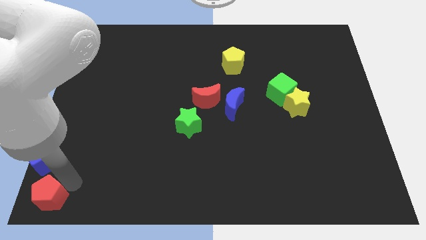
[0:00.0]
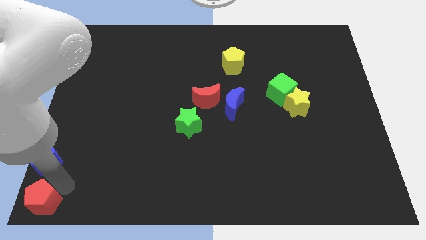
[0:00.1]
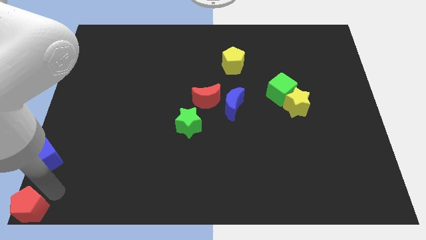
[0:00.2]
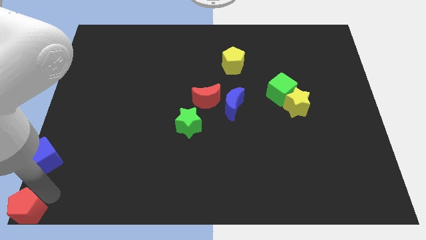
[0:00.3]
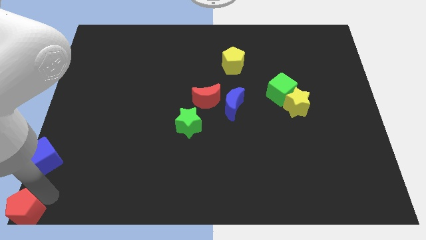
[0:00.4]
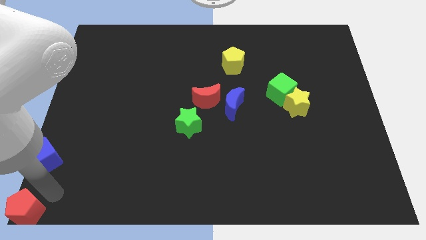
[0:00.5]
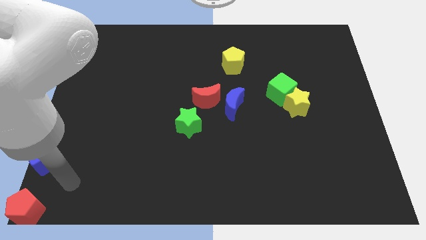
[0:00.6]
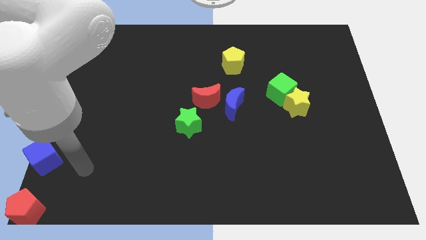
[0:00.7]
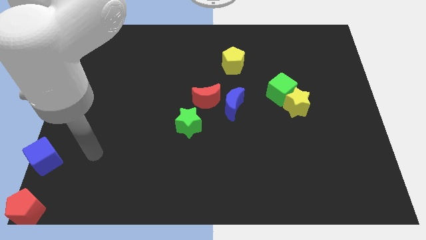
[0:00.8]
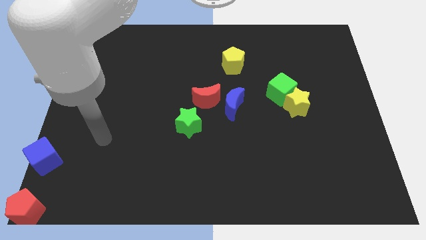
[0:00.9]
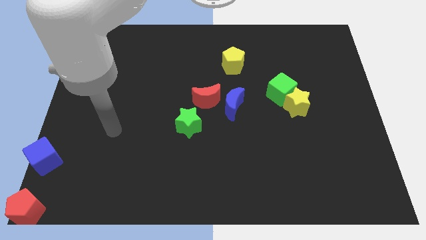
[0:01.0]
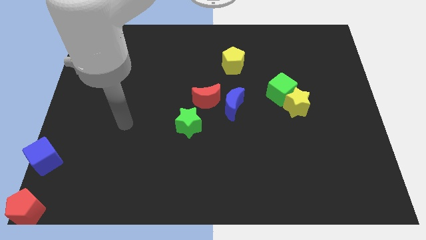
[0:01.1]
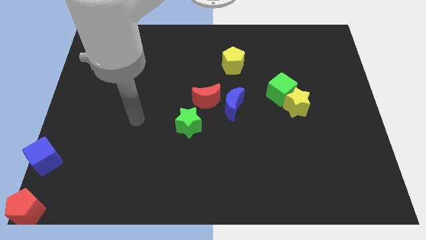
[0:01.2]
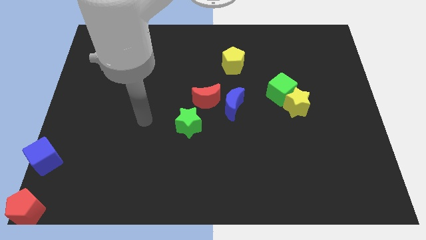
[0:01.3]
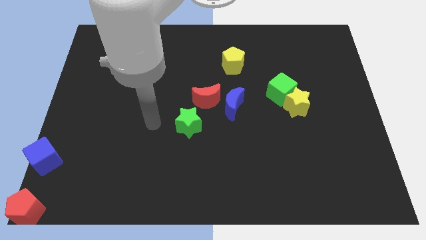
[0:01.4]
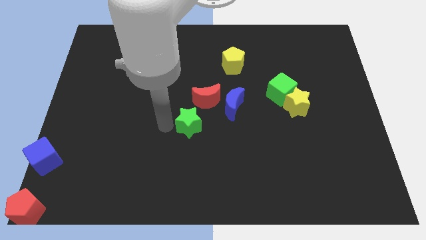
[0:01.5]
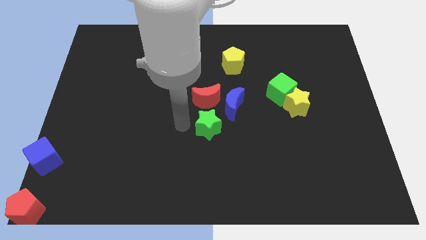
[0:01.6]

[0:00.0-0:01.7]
move the arm away from the red pentagon

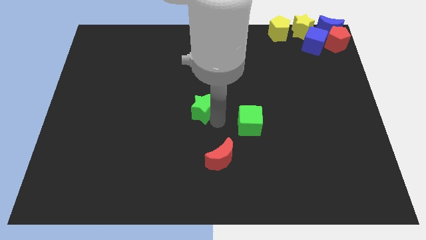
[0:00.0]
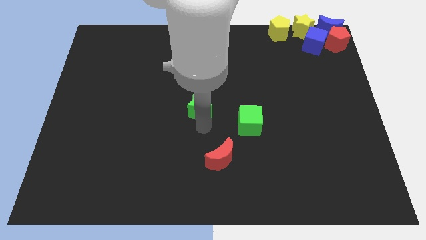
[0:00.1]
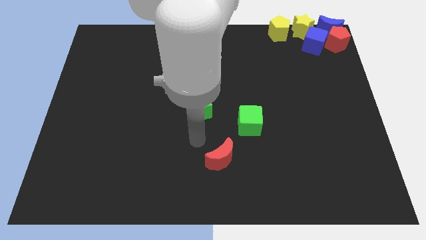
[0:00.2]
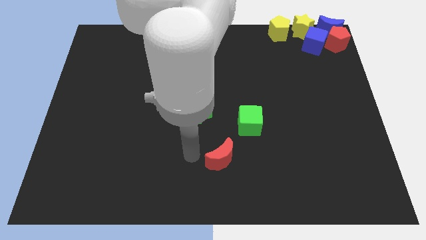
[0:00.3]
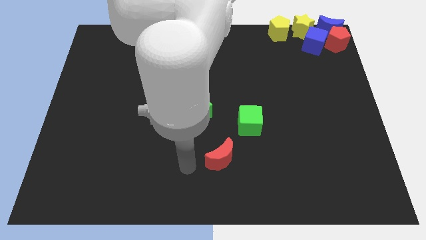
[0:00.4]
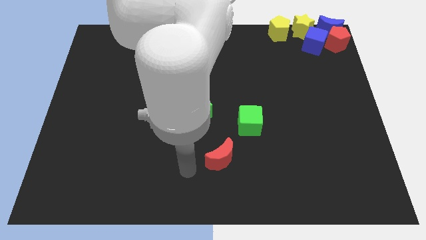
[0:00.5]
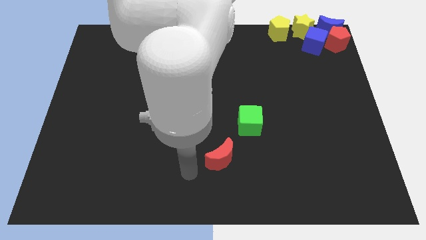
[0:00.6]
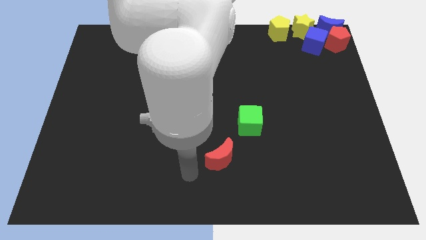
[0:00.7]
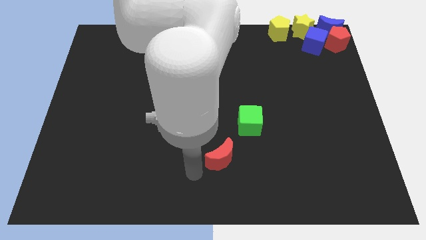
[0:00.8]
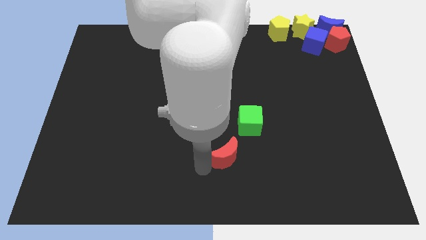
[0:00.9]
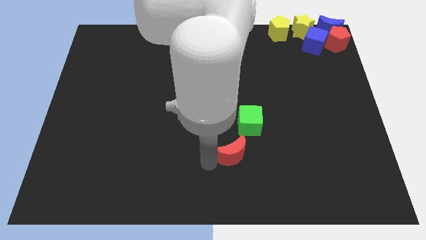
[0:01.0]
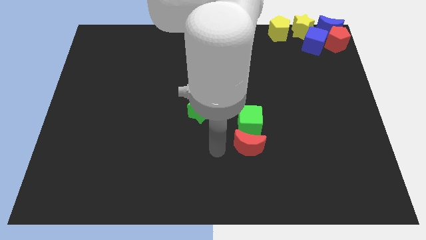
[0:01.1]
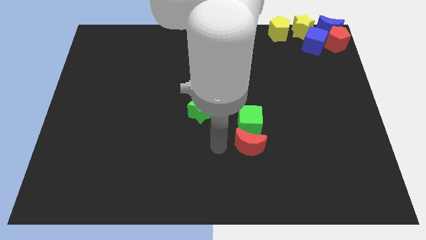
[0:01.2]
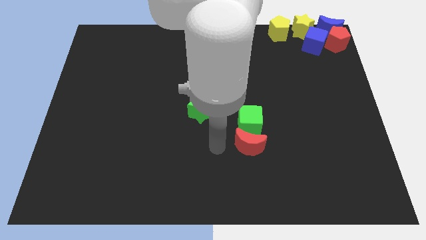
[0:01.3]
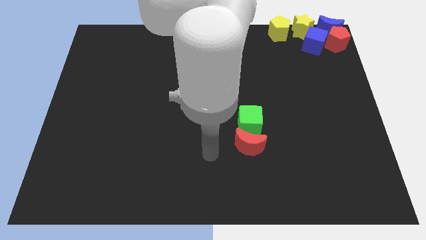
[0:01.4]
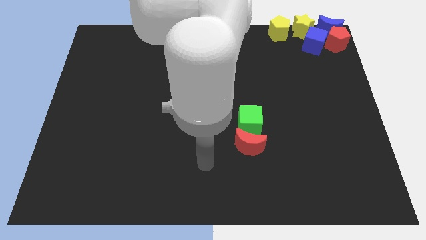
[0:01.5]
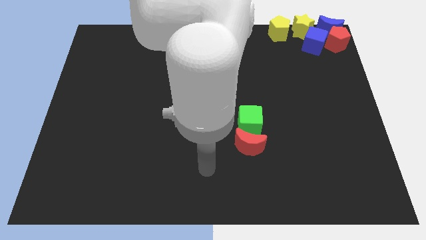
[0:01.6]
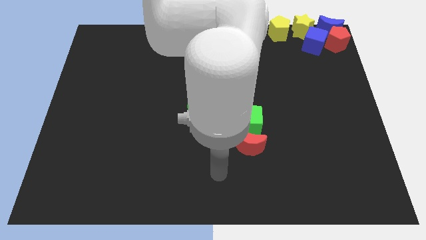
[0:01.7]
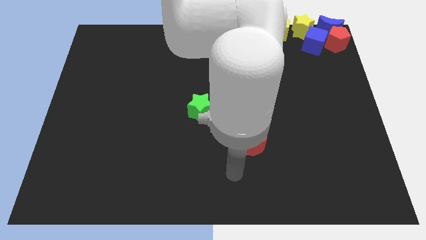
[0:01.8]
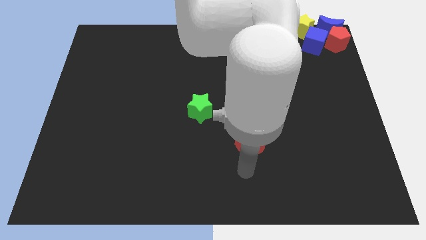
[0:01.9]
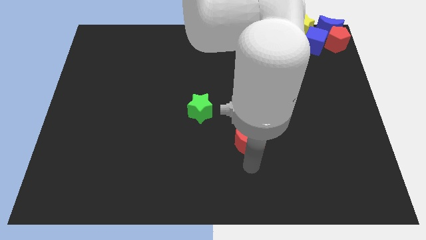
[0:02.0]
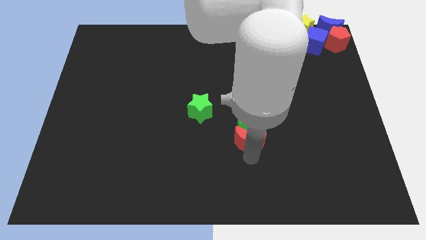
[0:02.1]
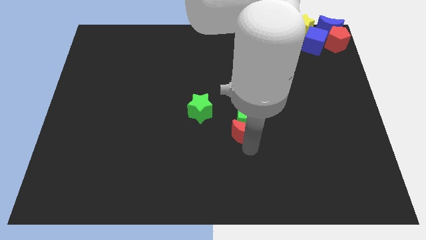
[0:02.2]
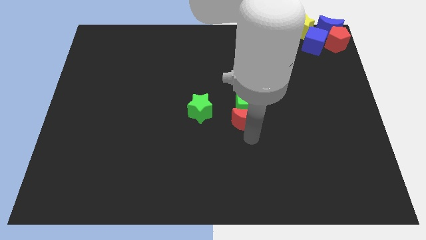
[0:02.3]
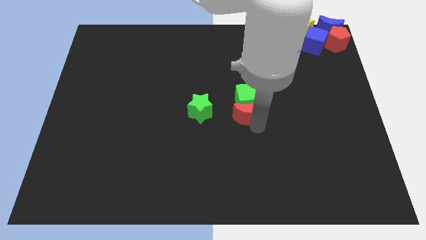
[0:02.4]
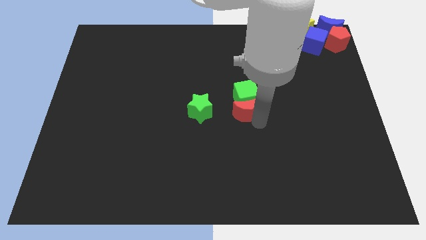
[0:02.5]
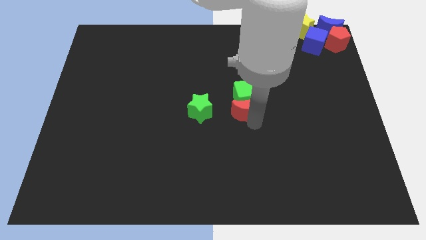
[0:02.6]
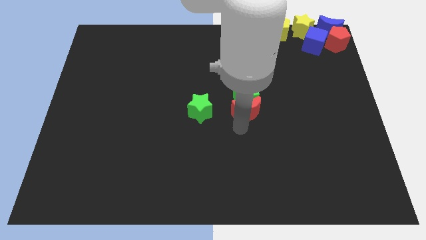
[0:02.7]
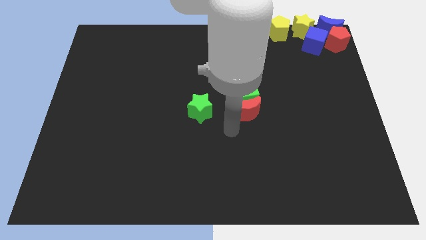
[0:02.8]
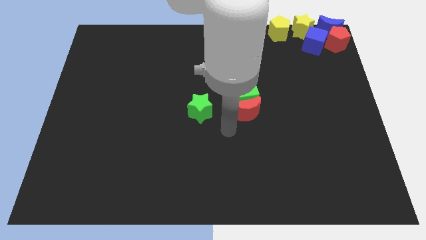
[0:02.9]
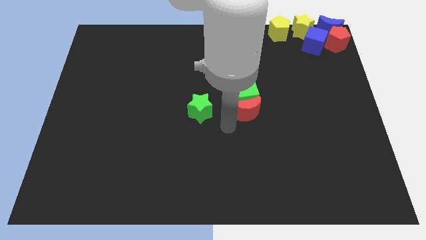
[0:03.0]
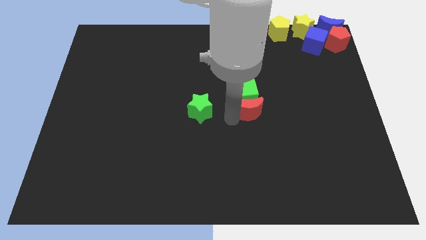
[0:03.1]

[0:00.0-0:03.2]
push the red crescent along with the green cube to the center of the board

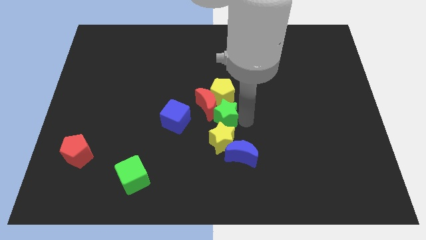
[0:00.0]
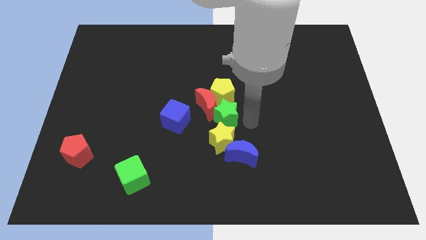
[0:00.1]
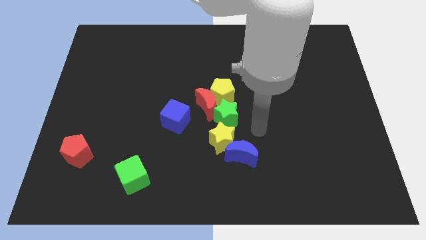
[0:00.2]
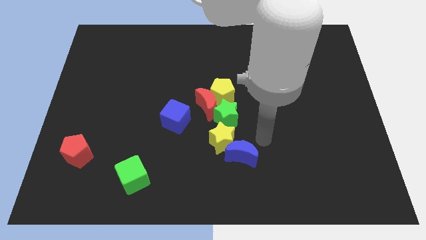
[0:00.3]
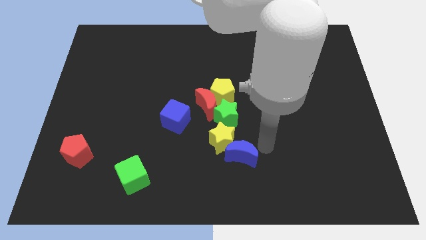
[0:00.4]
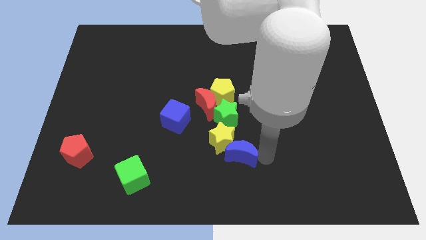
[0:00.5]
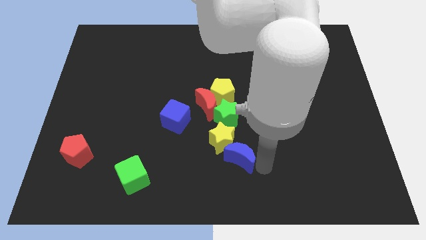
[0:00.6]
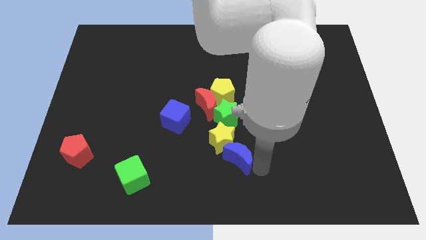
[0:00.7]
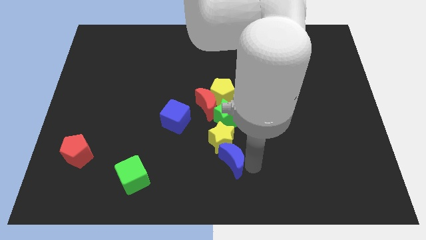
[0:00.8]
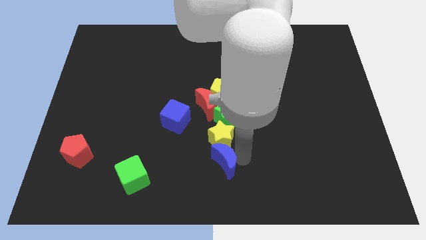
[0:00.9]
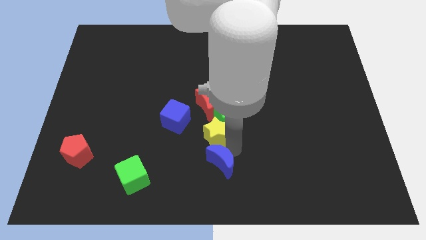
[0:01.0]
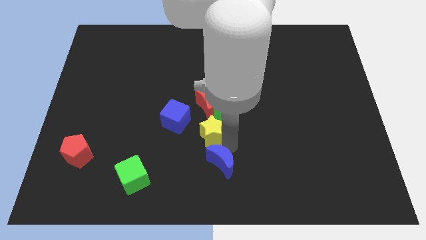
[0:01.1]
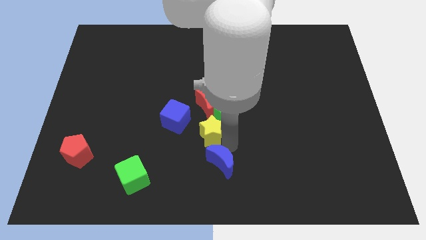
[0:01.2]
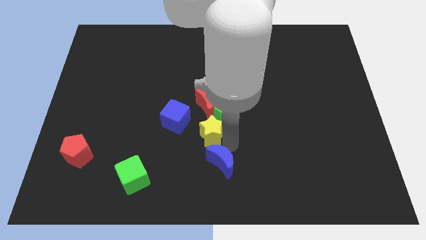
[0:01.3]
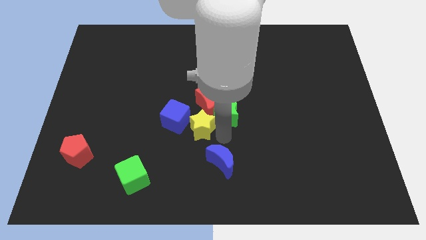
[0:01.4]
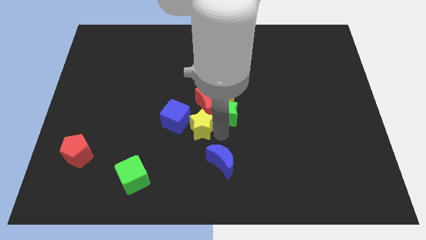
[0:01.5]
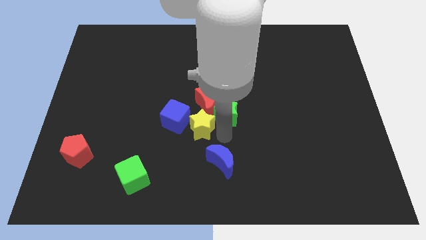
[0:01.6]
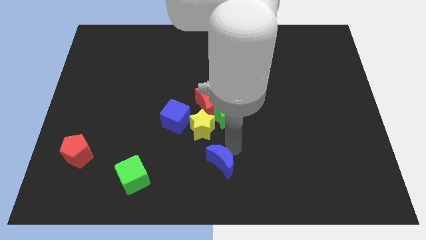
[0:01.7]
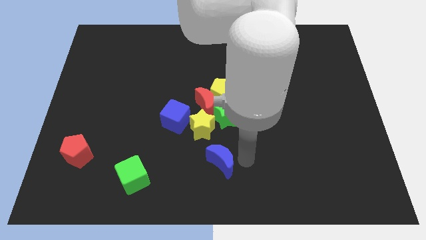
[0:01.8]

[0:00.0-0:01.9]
push the yellow star towards the blue cube

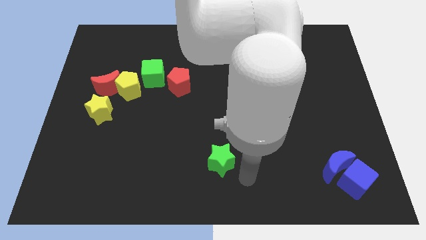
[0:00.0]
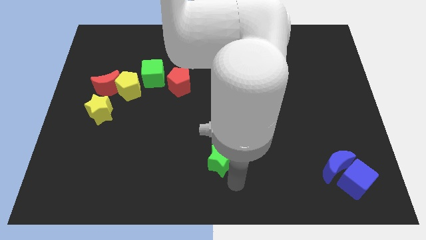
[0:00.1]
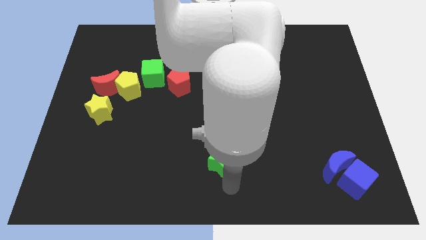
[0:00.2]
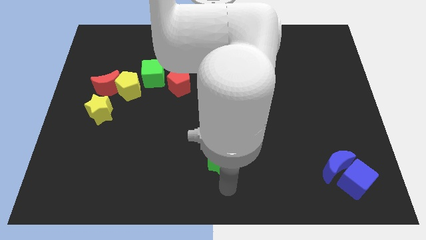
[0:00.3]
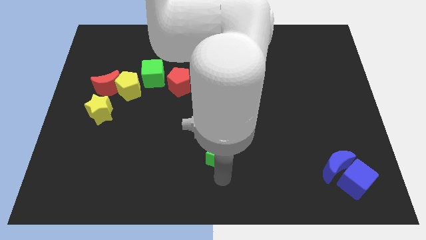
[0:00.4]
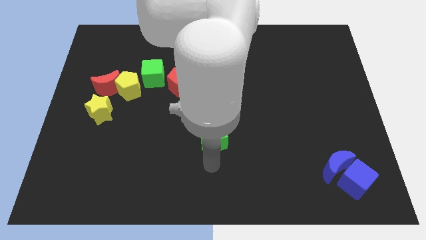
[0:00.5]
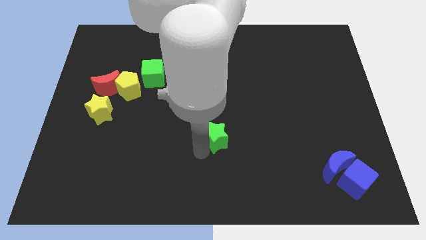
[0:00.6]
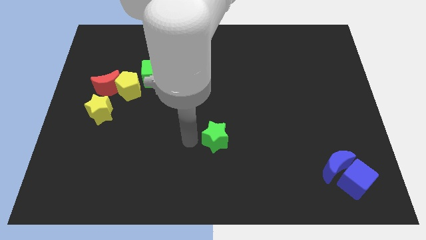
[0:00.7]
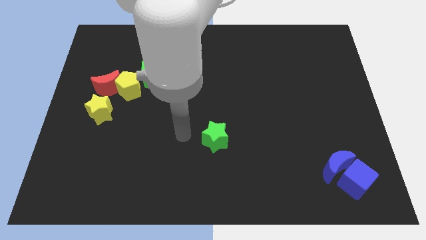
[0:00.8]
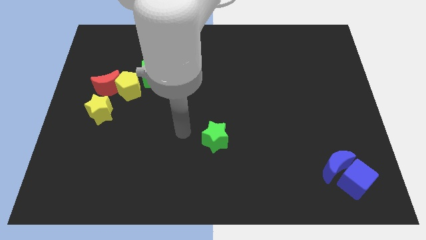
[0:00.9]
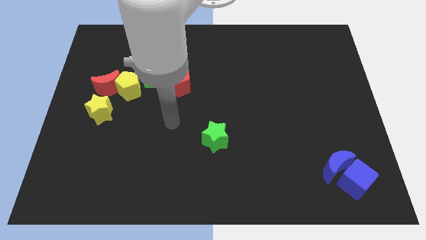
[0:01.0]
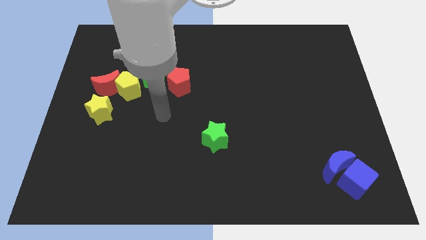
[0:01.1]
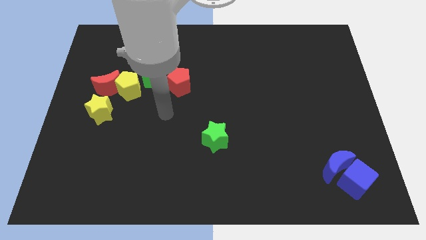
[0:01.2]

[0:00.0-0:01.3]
move green star slightly upwards

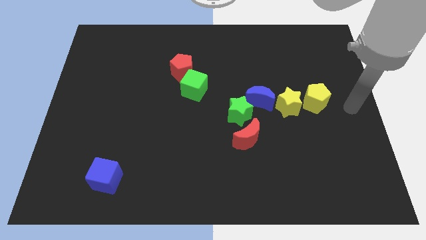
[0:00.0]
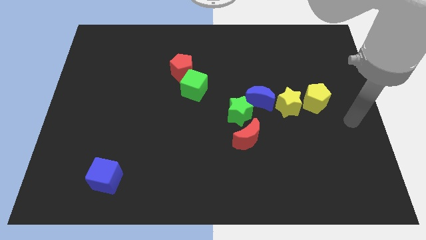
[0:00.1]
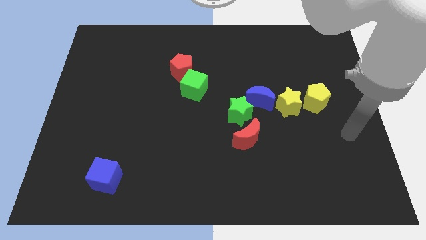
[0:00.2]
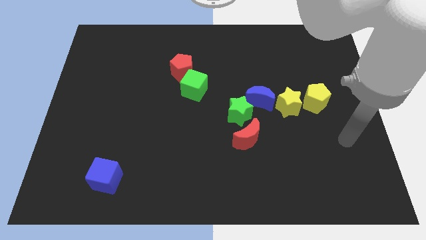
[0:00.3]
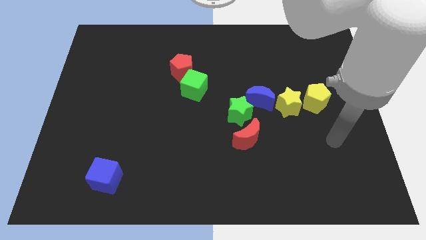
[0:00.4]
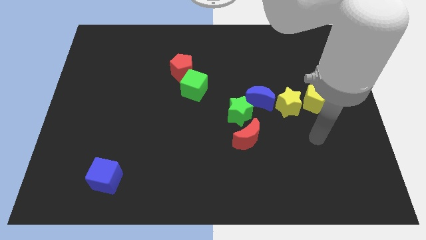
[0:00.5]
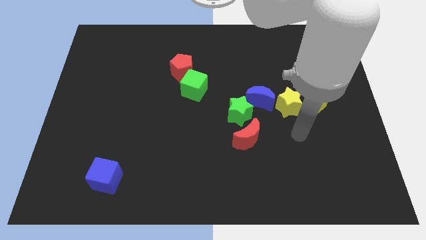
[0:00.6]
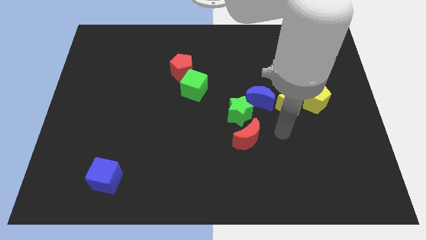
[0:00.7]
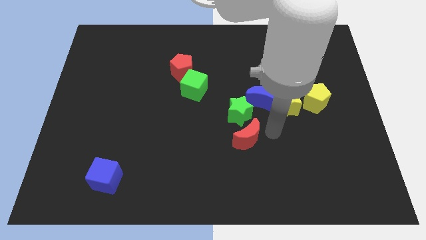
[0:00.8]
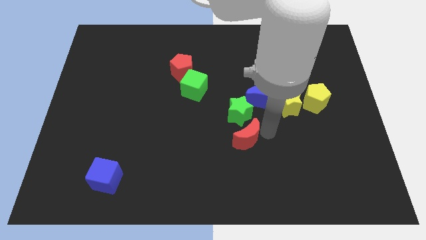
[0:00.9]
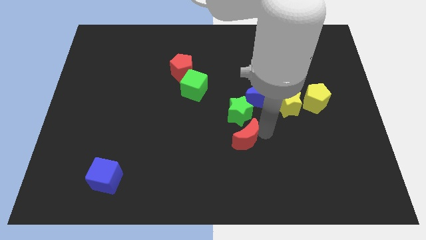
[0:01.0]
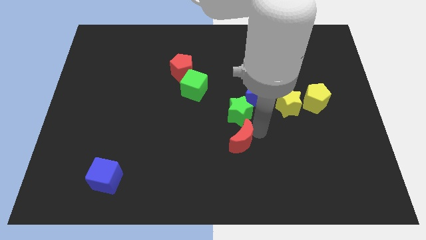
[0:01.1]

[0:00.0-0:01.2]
place the arm right to the red moon
